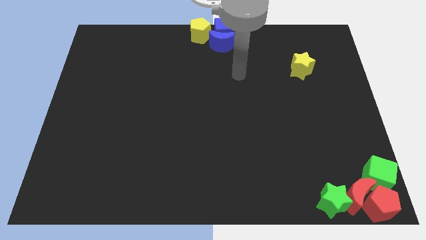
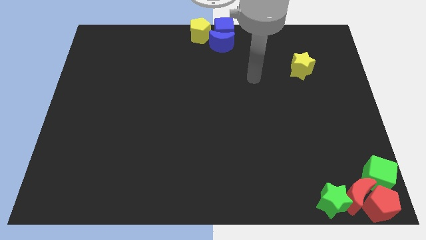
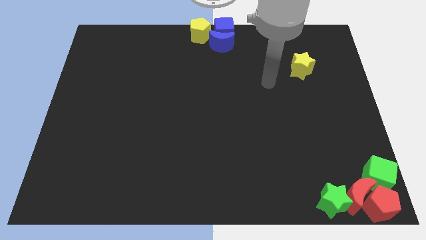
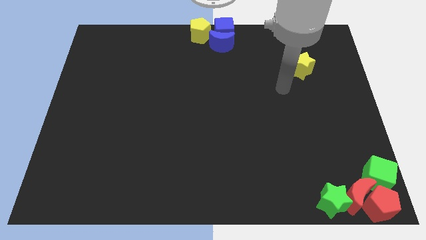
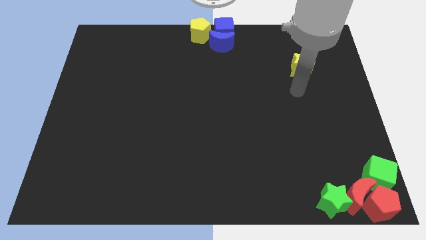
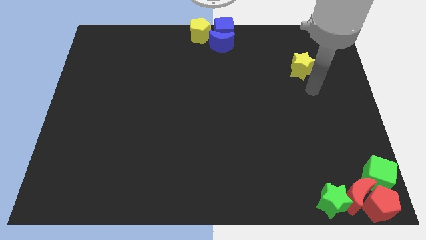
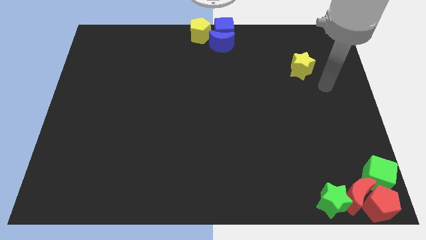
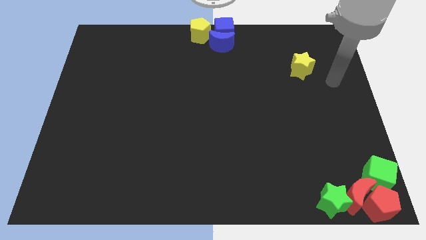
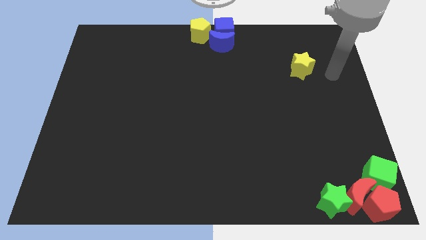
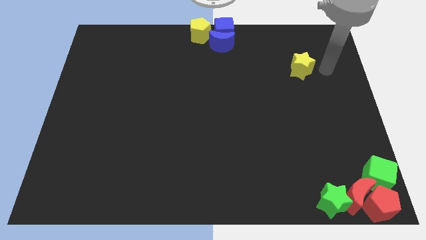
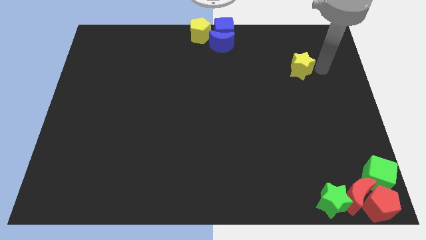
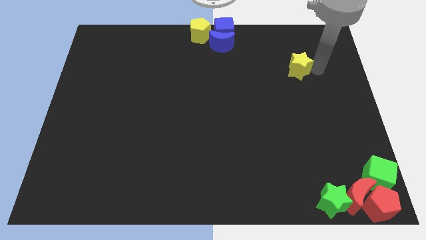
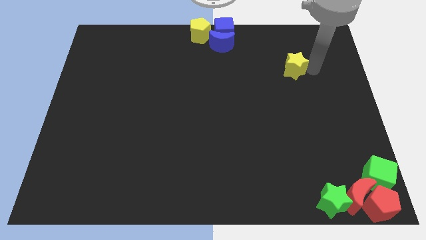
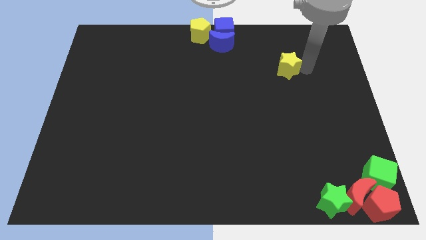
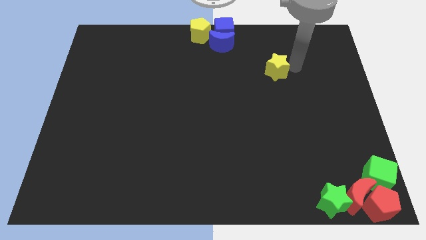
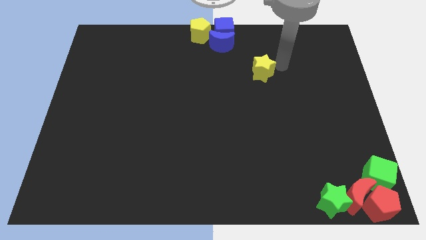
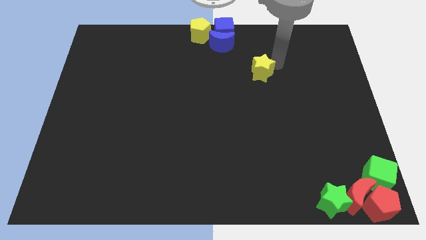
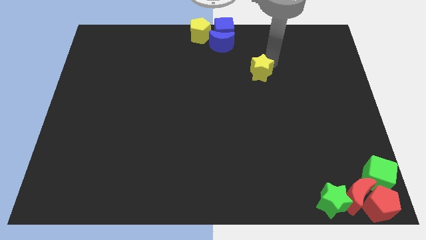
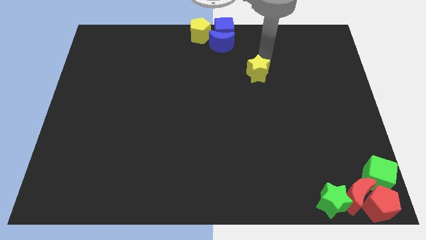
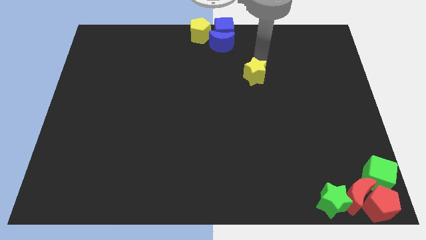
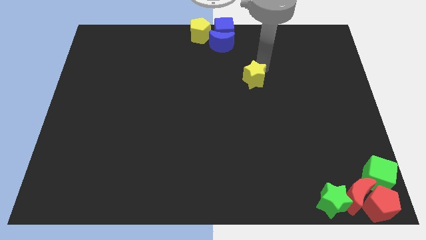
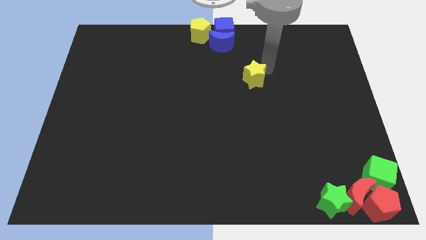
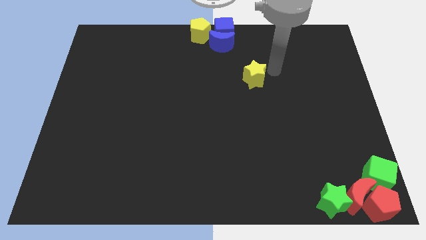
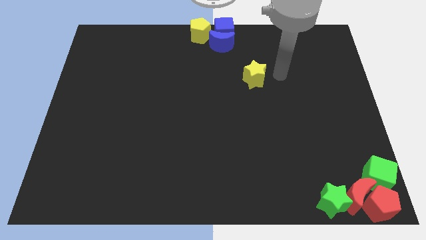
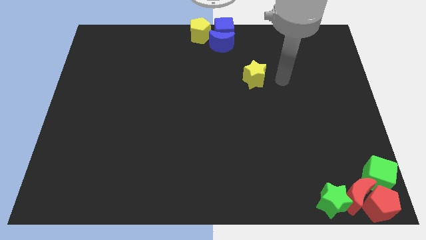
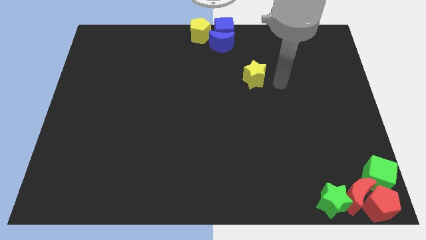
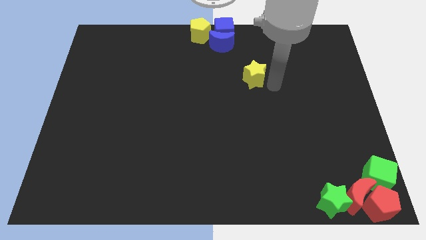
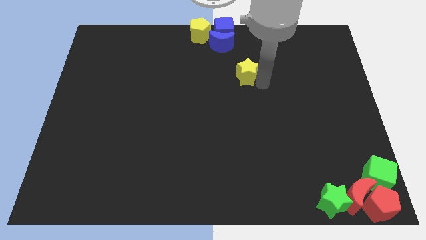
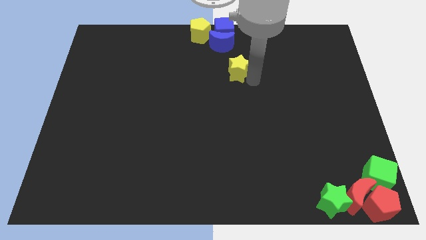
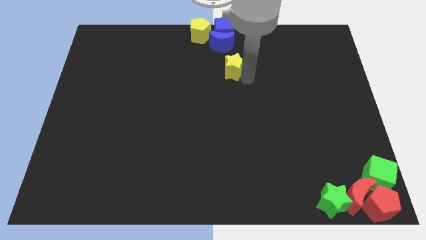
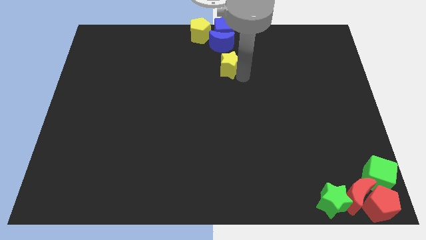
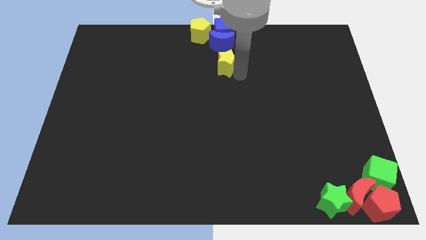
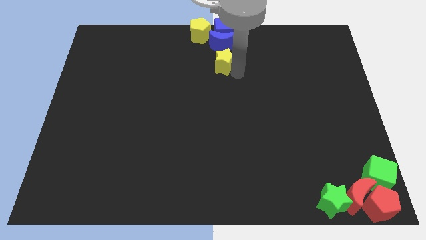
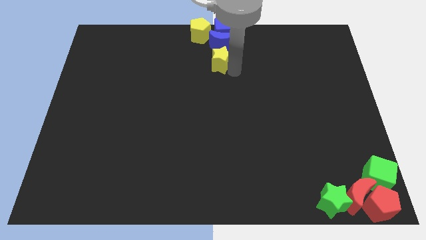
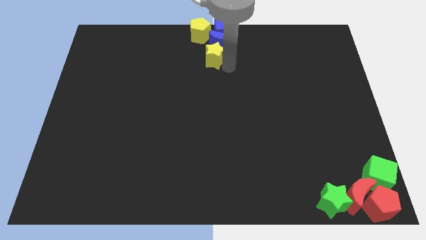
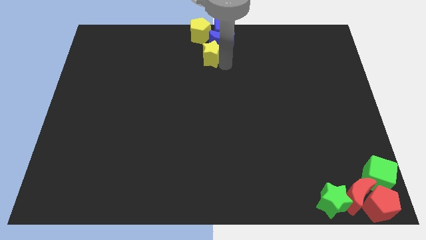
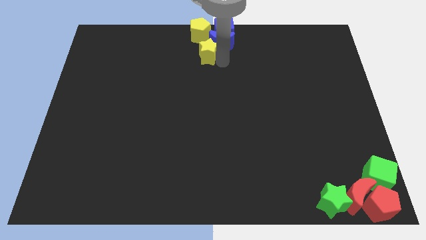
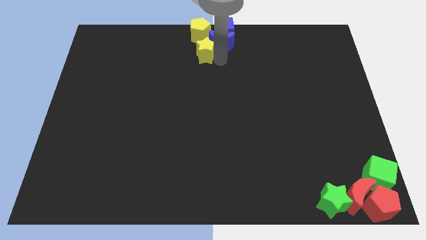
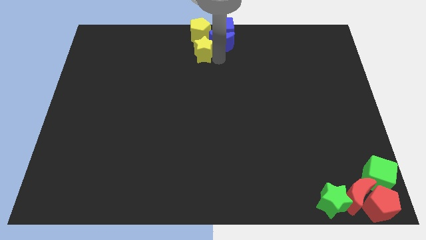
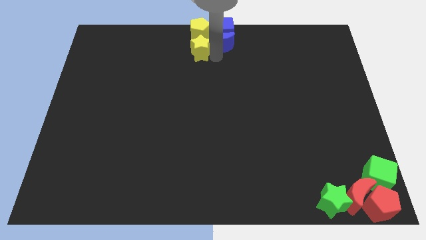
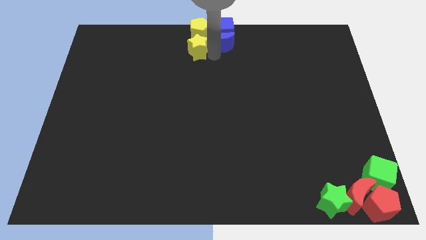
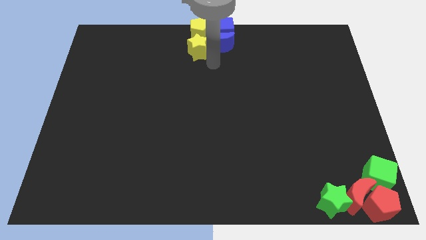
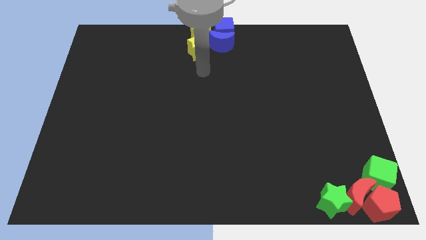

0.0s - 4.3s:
put the yellow star below the yellow pentagon

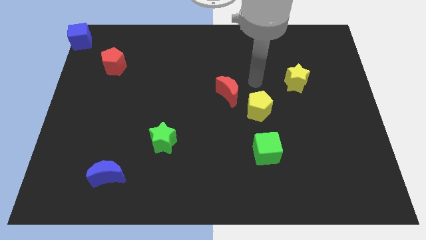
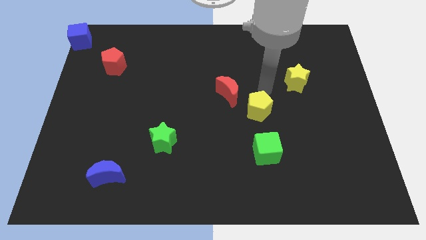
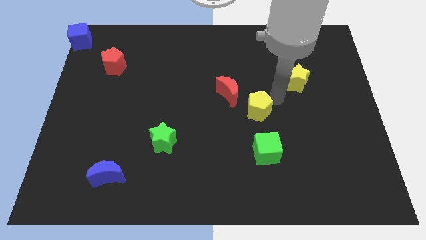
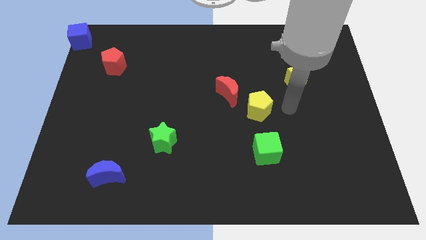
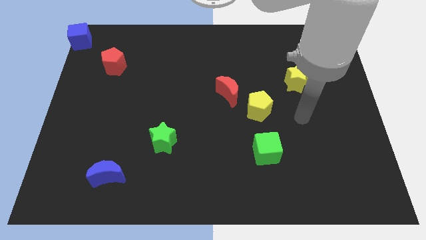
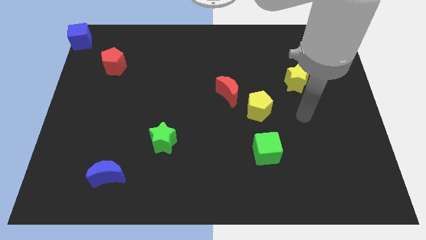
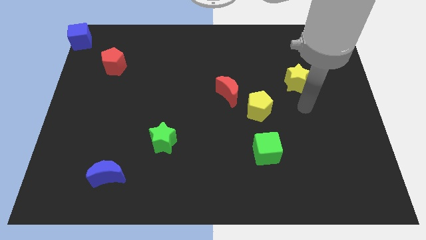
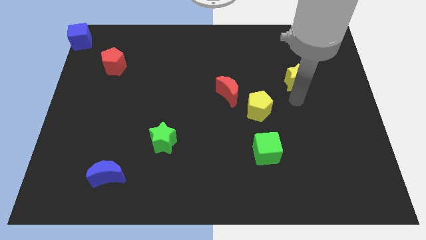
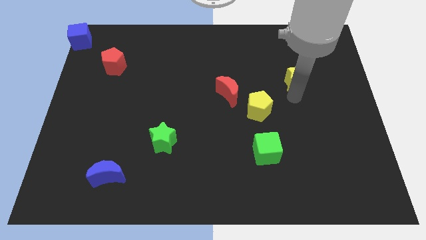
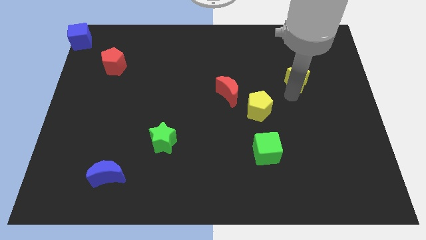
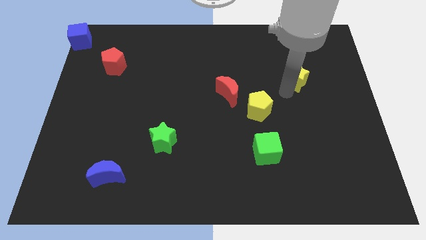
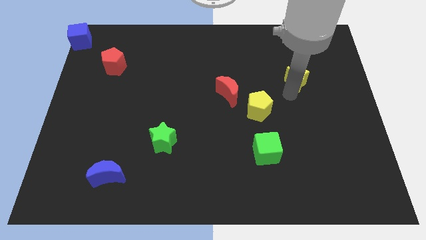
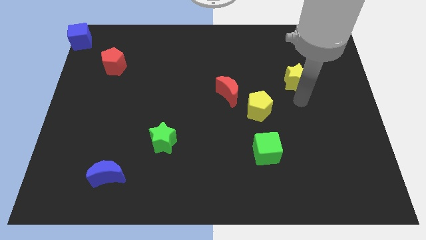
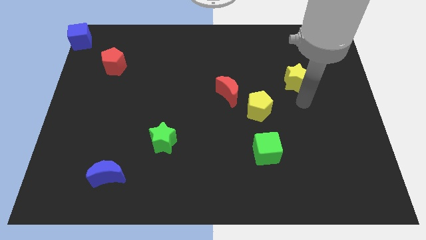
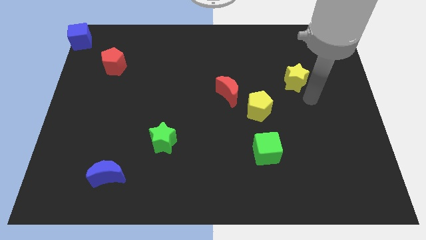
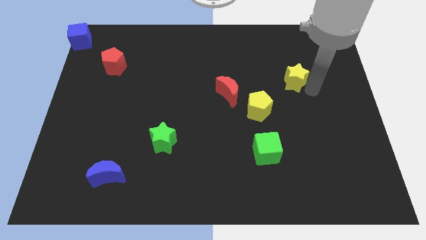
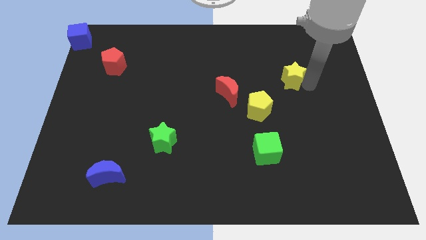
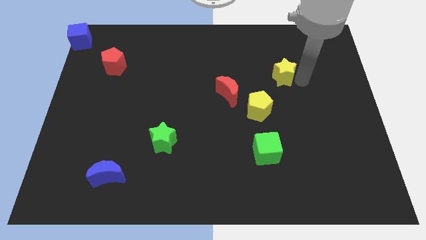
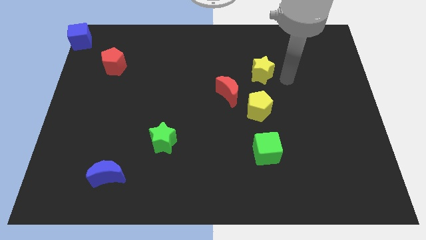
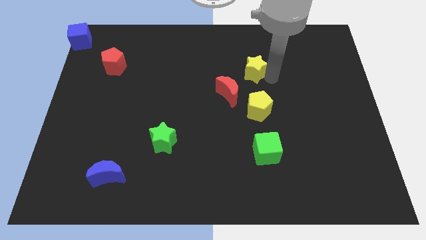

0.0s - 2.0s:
place the yellow star above the yellow pentagon

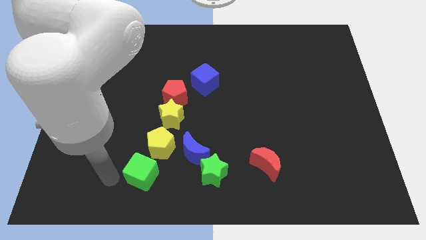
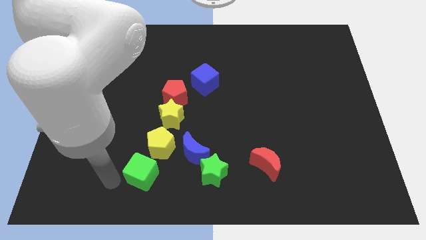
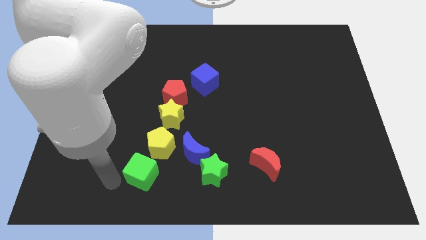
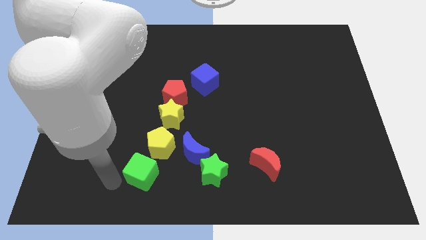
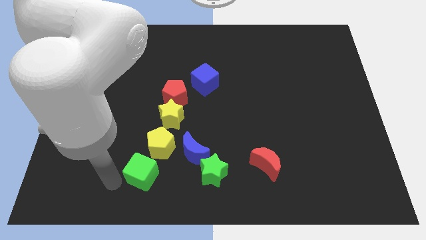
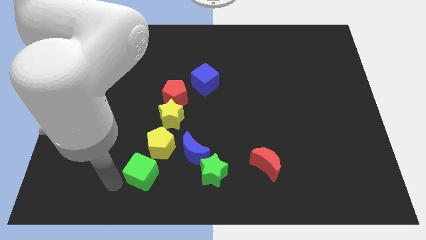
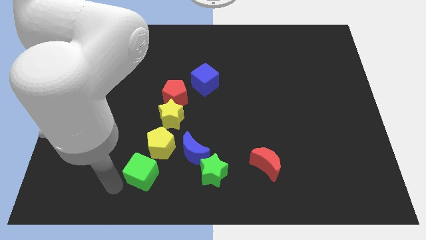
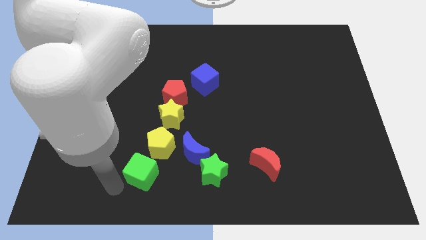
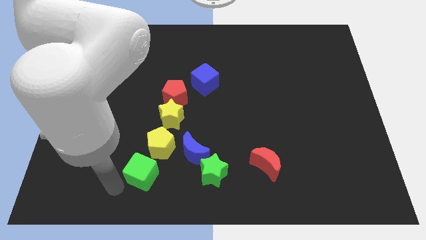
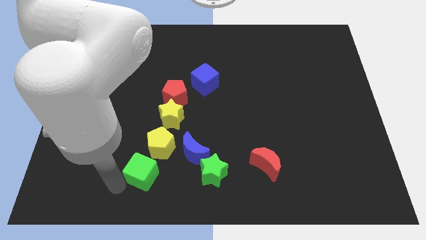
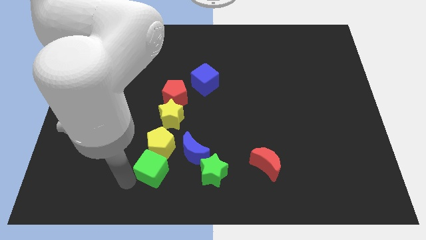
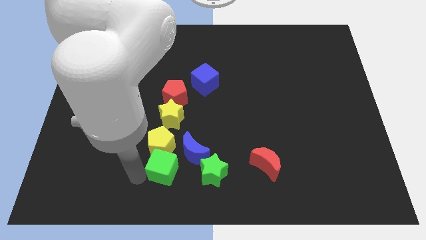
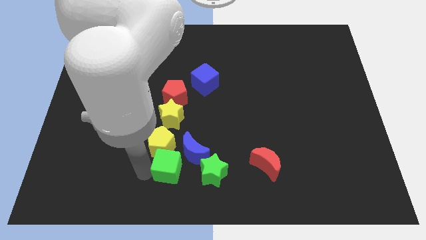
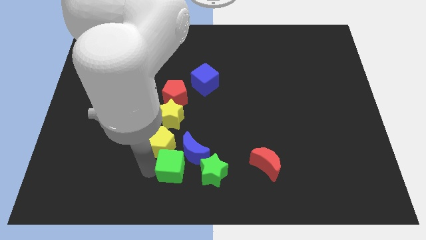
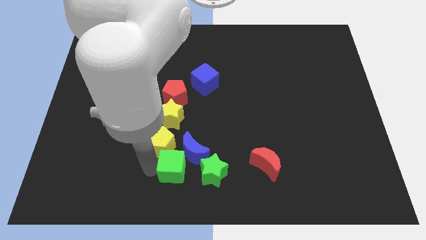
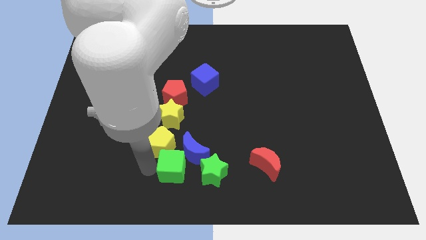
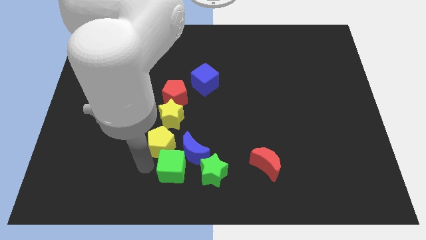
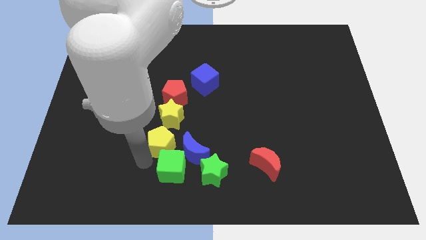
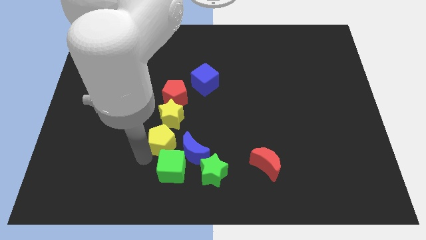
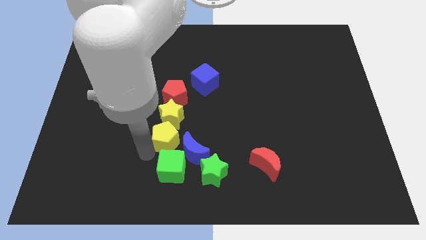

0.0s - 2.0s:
push green cube beside blue moon

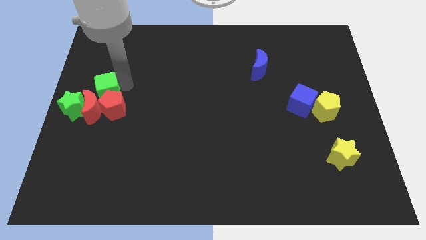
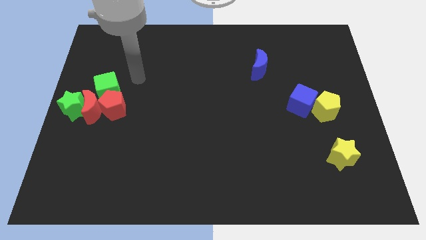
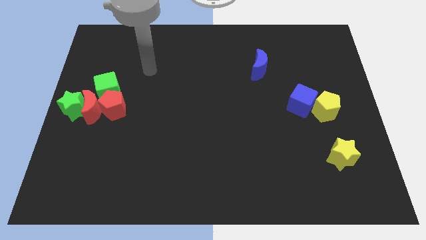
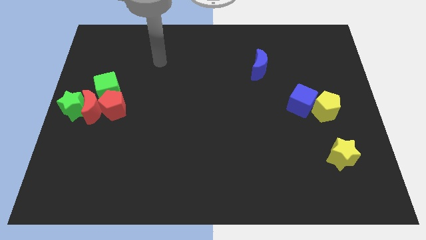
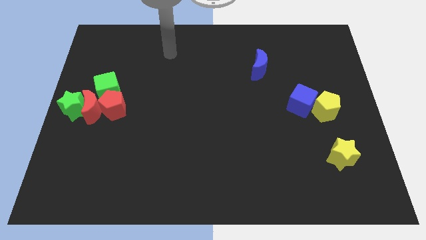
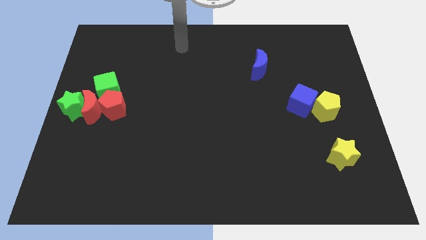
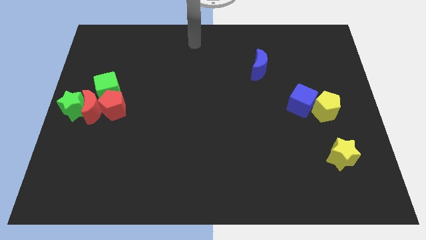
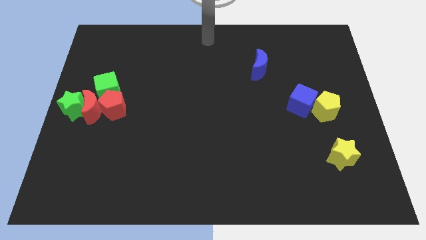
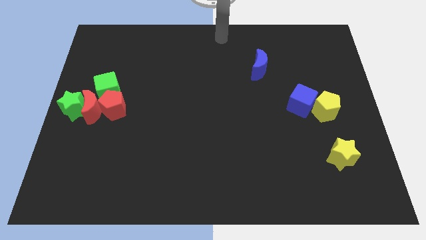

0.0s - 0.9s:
move your arm to the top center of the board
